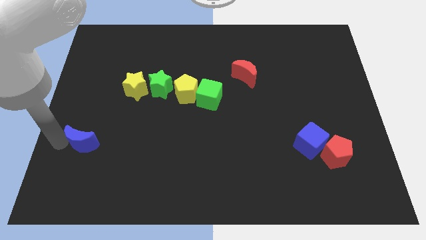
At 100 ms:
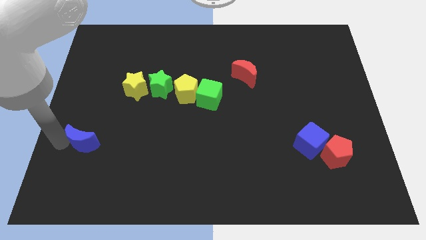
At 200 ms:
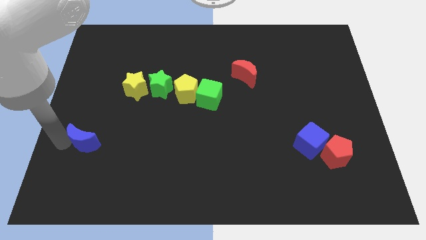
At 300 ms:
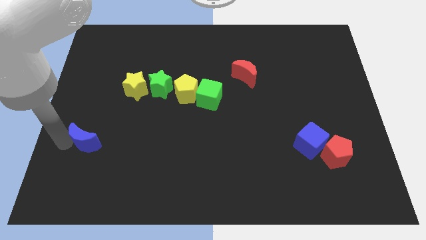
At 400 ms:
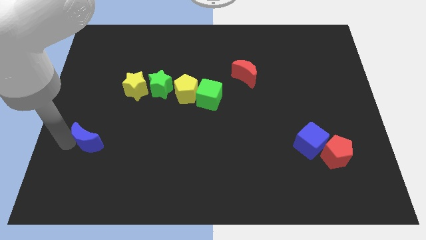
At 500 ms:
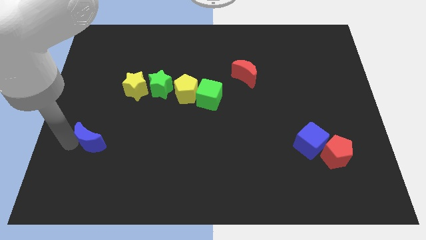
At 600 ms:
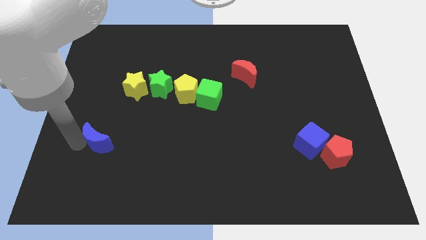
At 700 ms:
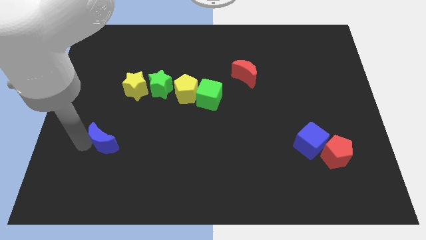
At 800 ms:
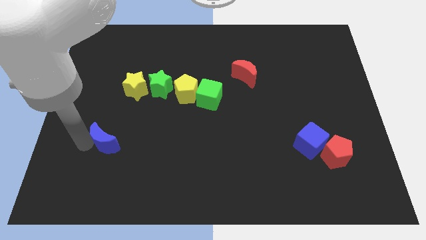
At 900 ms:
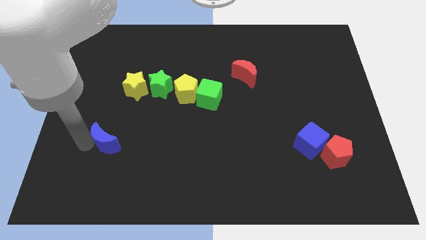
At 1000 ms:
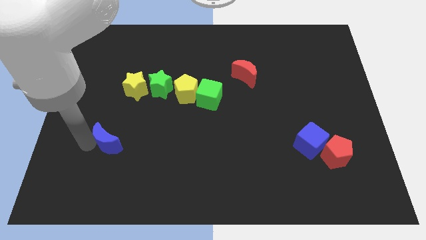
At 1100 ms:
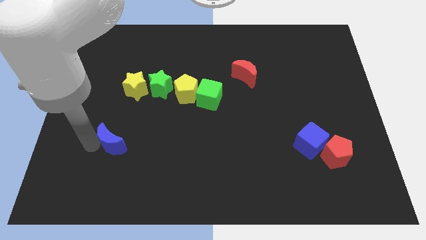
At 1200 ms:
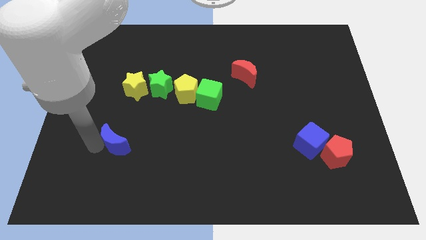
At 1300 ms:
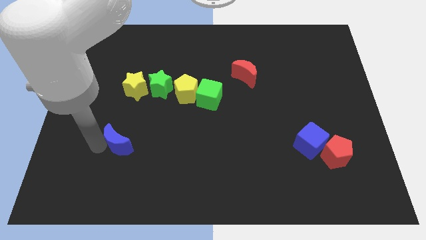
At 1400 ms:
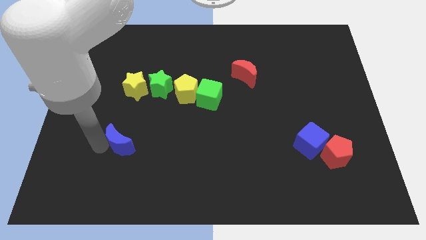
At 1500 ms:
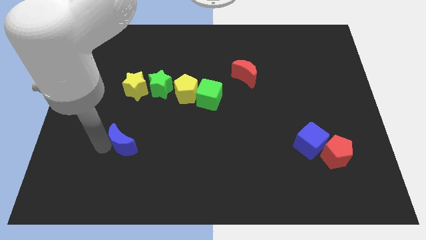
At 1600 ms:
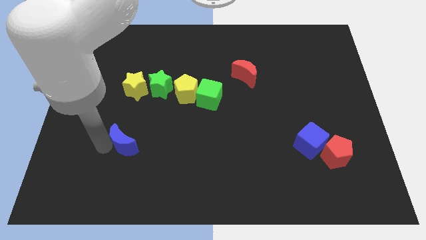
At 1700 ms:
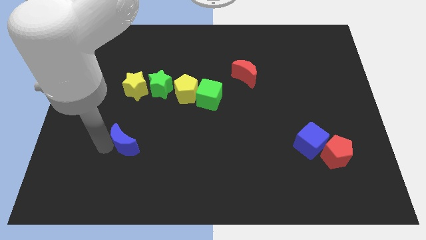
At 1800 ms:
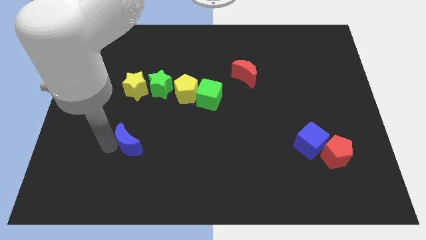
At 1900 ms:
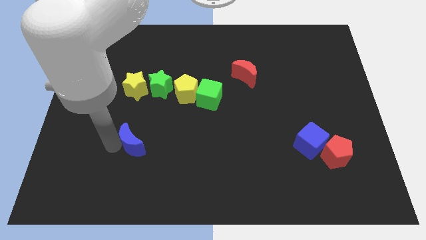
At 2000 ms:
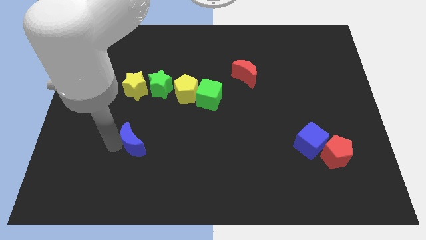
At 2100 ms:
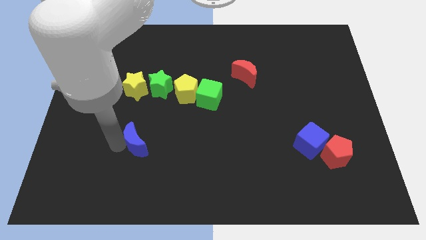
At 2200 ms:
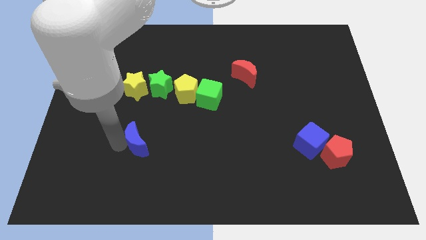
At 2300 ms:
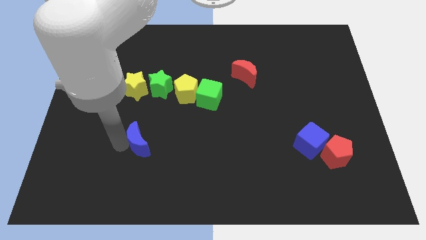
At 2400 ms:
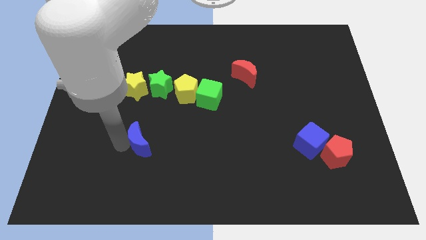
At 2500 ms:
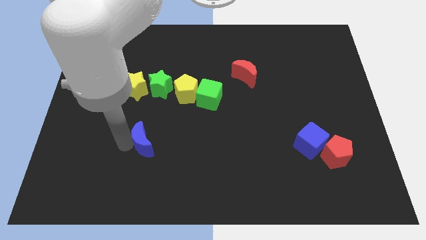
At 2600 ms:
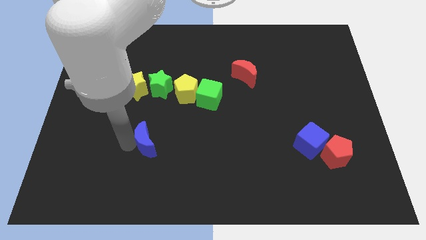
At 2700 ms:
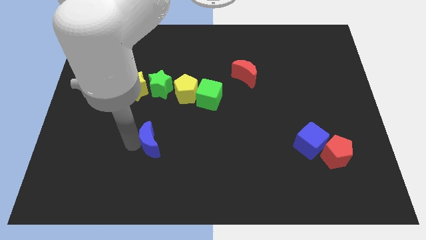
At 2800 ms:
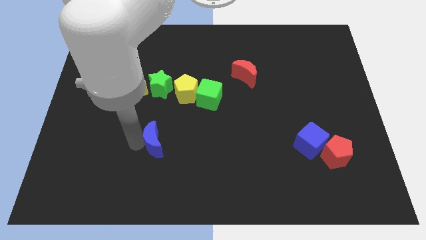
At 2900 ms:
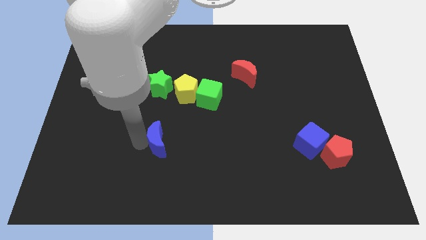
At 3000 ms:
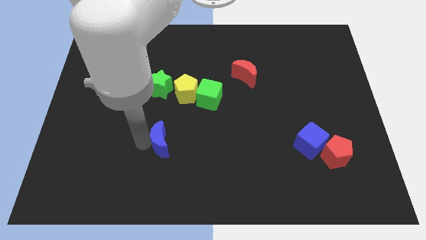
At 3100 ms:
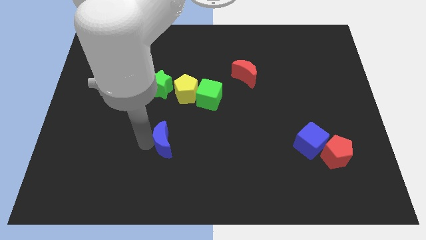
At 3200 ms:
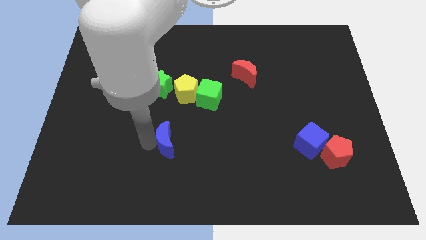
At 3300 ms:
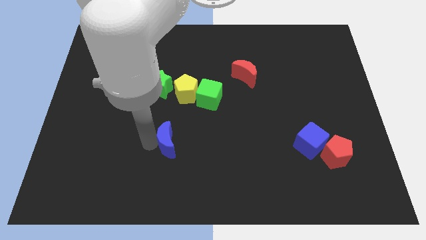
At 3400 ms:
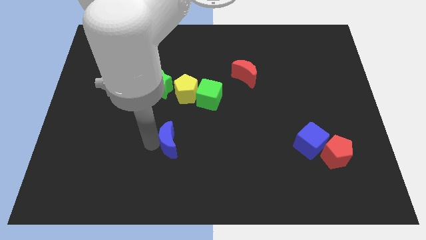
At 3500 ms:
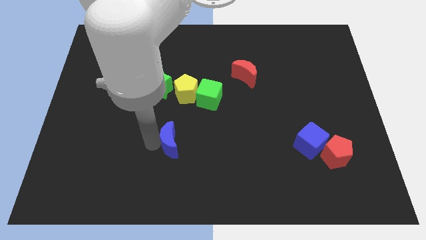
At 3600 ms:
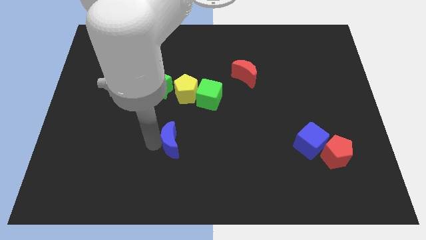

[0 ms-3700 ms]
move the blue crescent slightly to the right

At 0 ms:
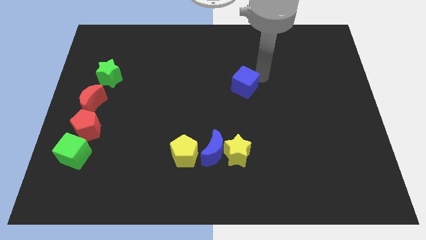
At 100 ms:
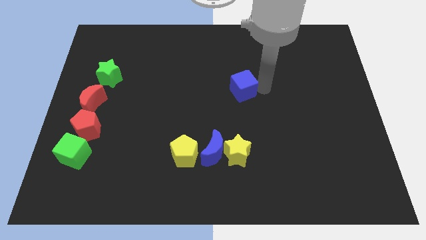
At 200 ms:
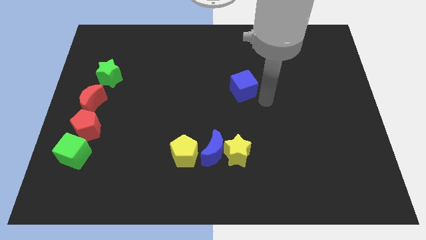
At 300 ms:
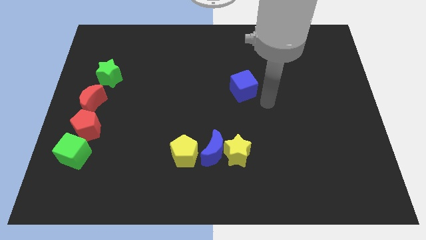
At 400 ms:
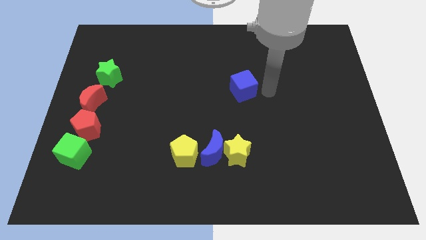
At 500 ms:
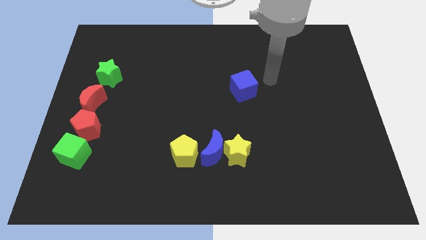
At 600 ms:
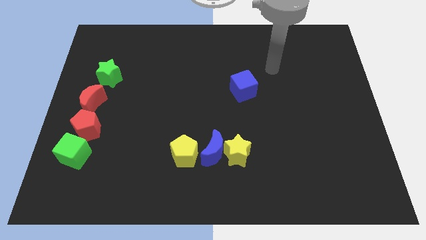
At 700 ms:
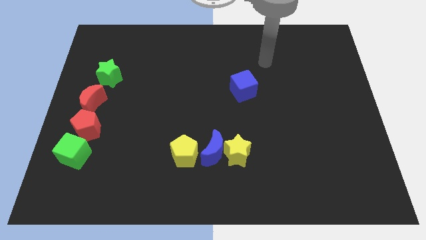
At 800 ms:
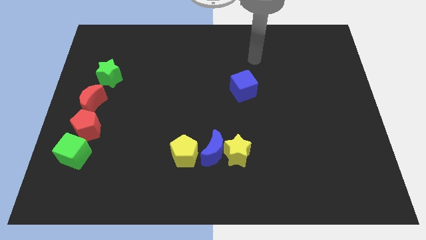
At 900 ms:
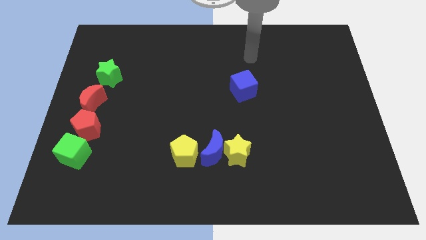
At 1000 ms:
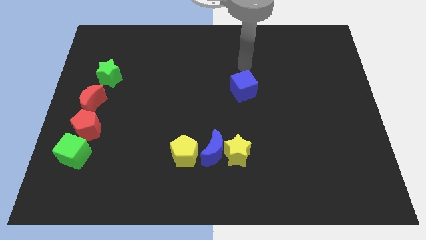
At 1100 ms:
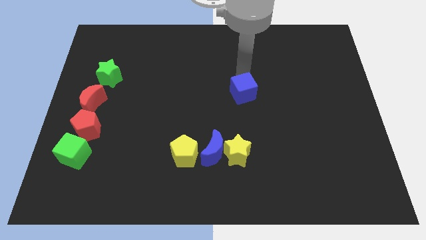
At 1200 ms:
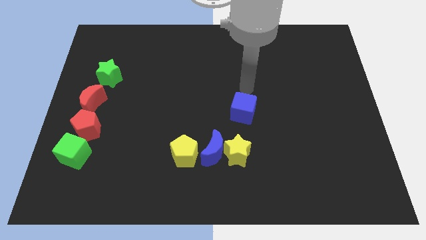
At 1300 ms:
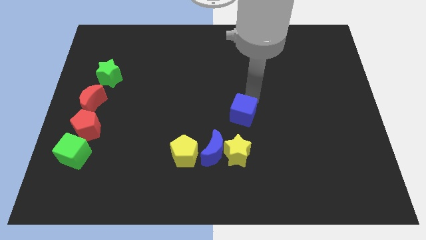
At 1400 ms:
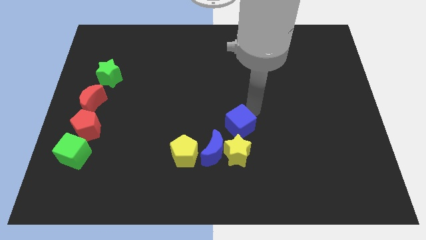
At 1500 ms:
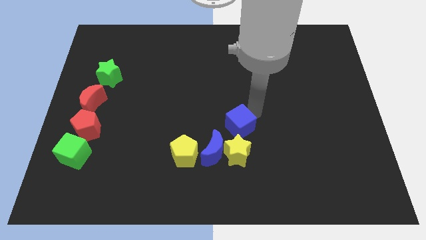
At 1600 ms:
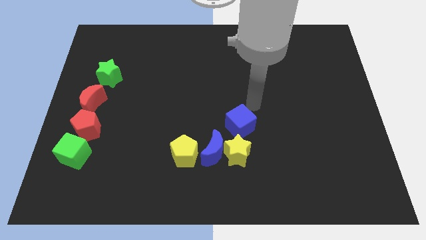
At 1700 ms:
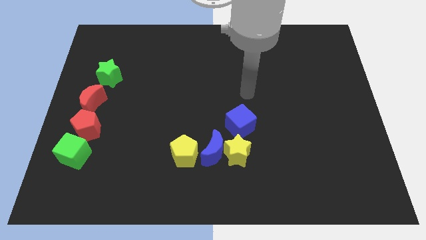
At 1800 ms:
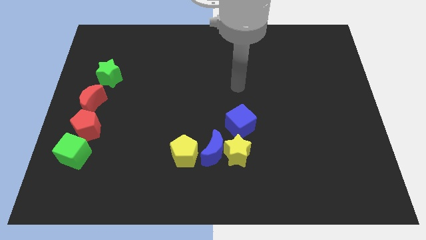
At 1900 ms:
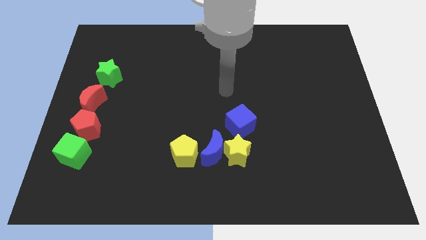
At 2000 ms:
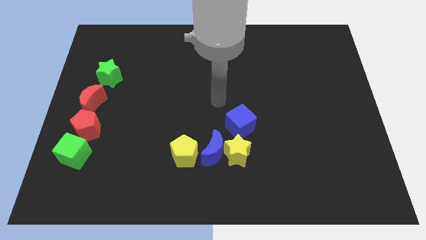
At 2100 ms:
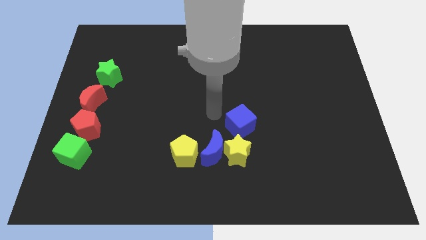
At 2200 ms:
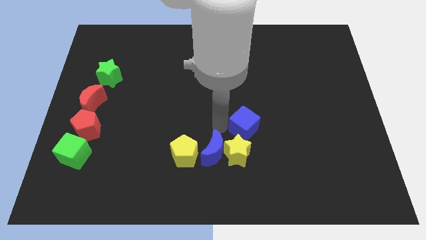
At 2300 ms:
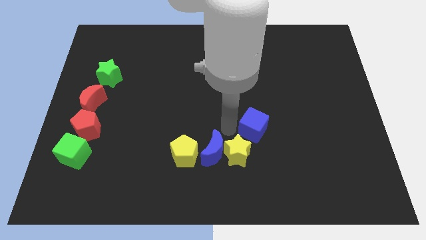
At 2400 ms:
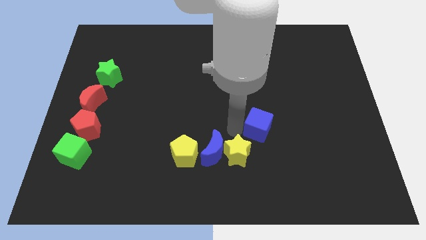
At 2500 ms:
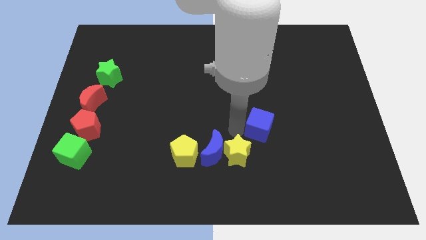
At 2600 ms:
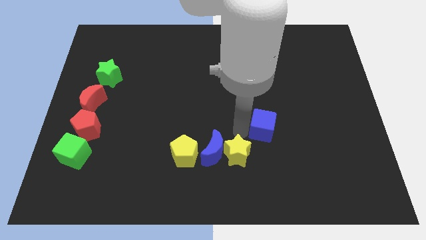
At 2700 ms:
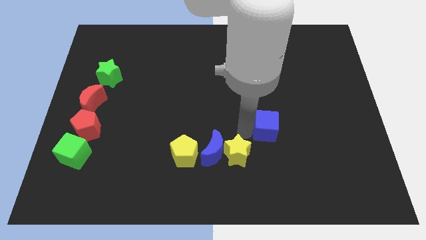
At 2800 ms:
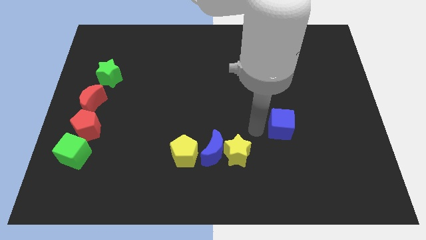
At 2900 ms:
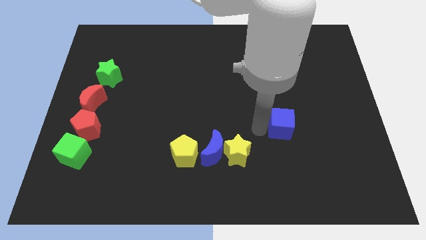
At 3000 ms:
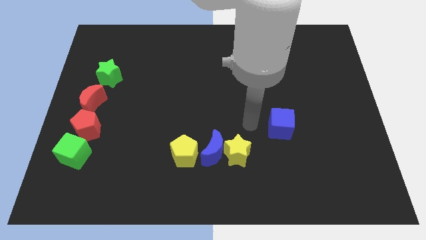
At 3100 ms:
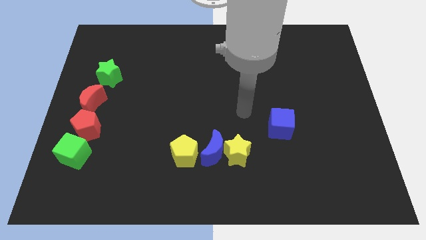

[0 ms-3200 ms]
push blue cube towards right side

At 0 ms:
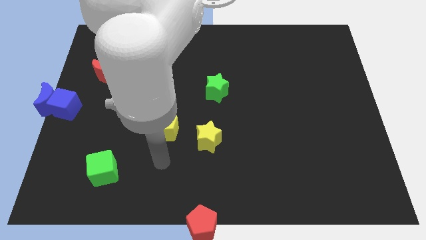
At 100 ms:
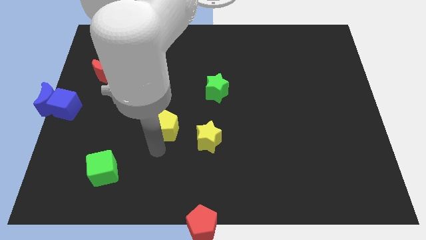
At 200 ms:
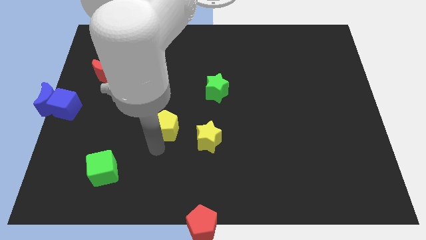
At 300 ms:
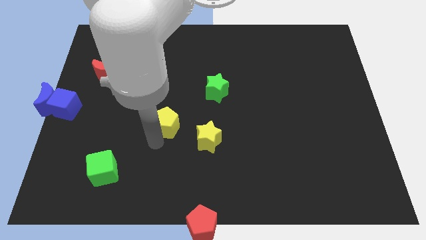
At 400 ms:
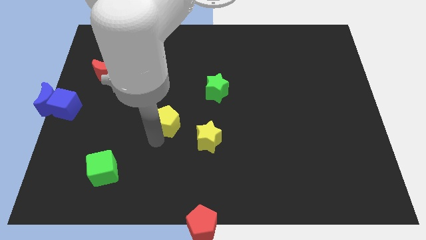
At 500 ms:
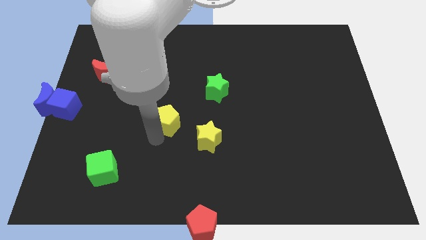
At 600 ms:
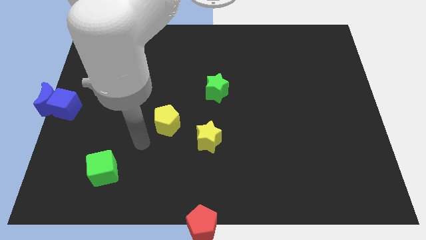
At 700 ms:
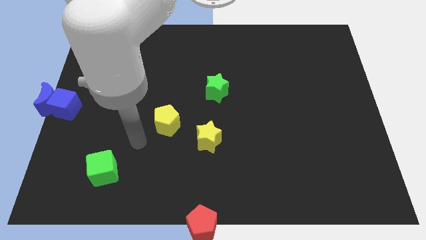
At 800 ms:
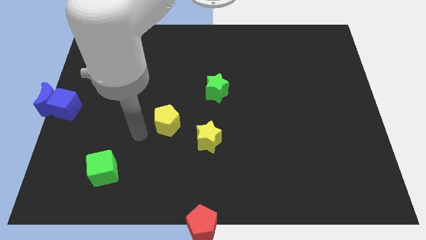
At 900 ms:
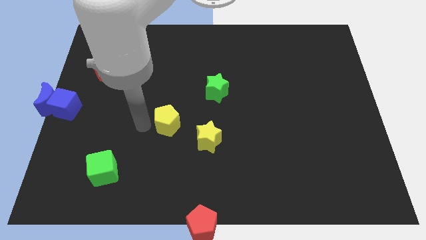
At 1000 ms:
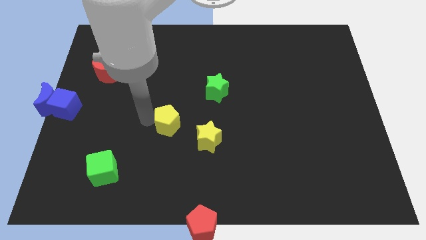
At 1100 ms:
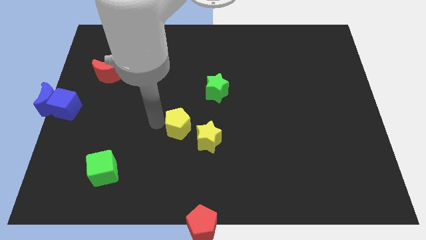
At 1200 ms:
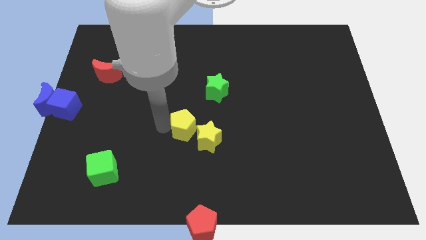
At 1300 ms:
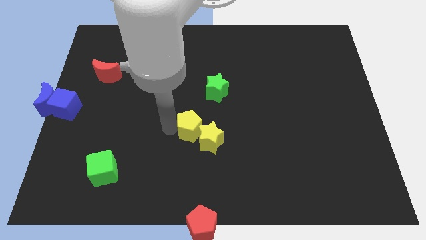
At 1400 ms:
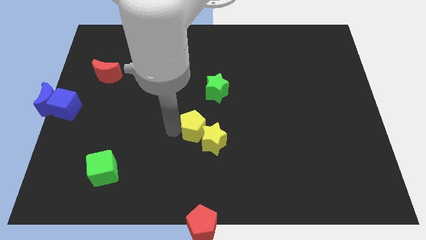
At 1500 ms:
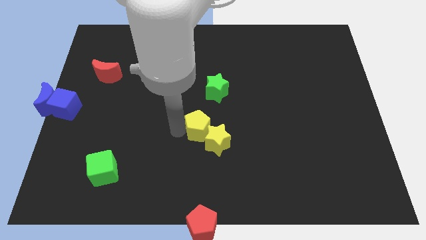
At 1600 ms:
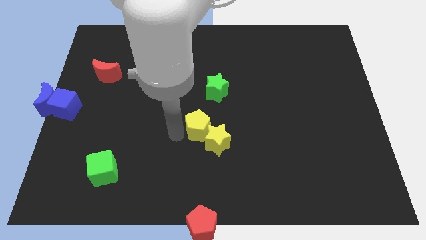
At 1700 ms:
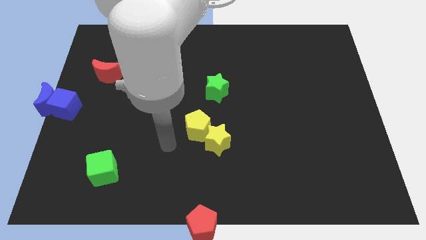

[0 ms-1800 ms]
push the yellow pentagon into the yellow star

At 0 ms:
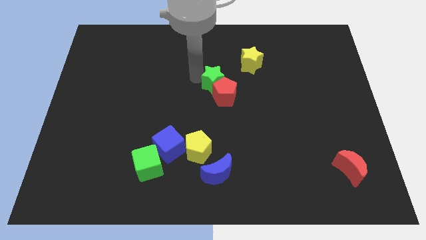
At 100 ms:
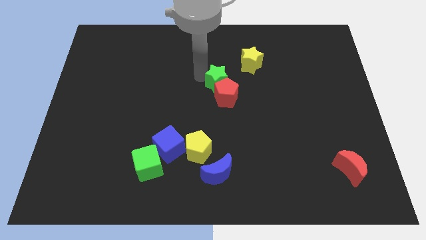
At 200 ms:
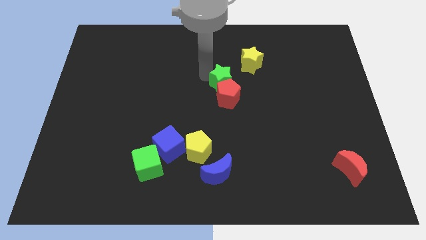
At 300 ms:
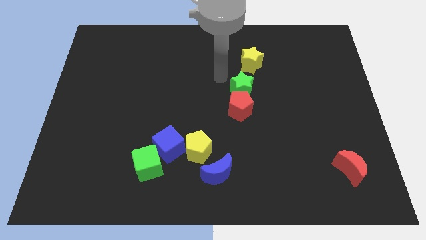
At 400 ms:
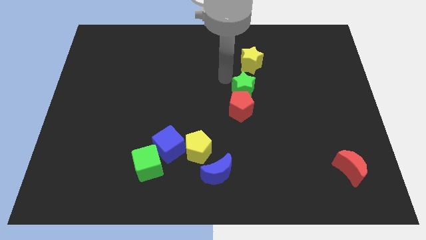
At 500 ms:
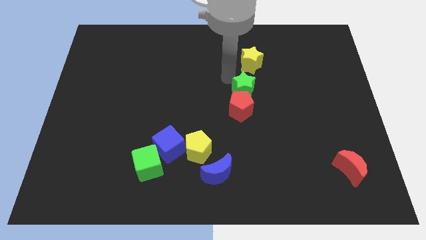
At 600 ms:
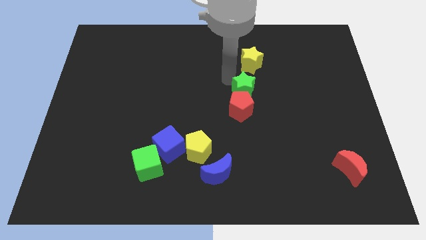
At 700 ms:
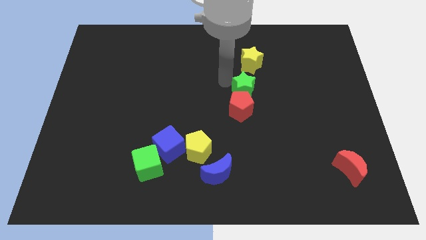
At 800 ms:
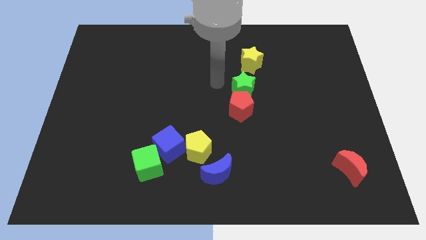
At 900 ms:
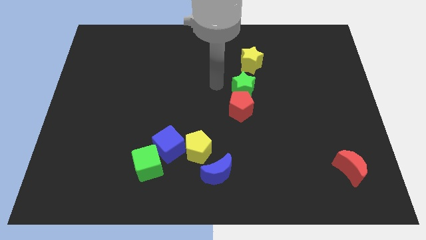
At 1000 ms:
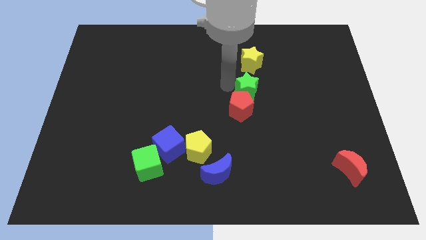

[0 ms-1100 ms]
move green star below the yellow star
